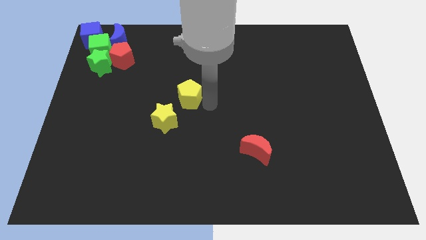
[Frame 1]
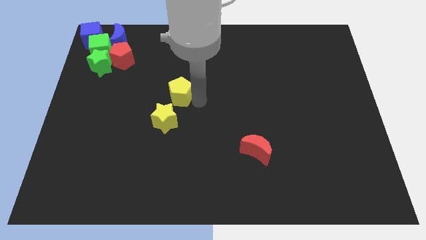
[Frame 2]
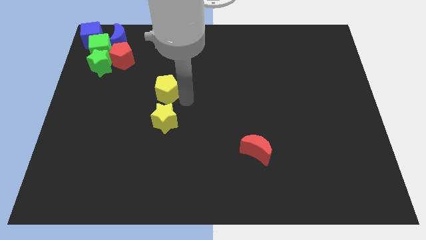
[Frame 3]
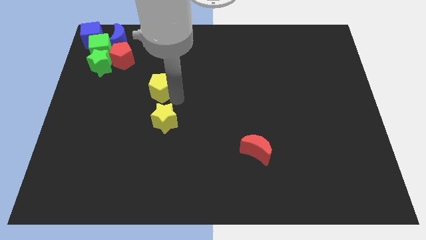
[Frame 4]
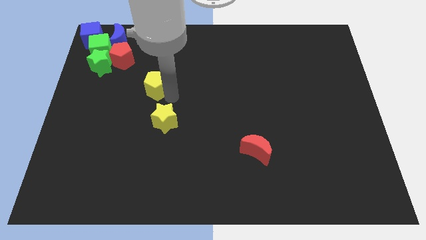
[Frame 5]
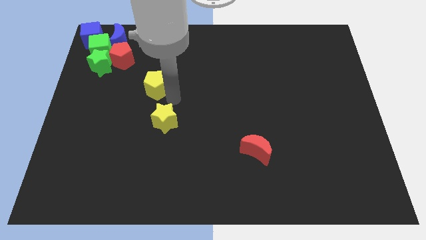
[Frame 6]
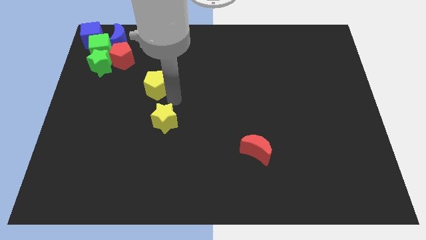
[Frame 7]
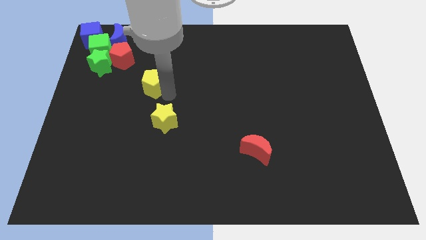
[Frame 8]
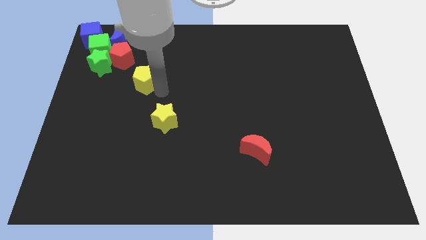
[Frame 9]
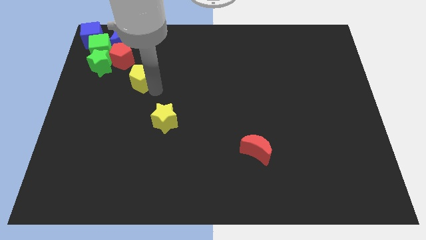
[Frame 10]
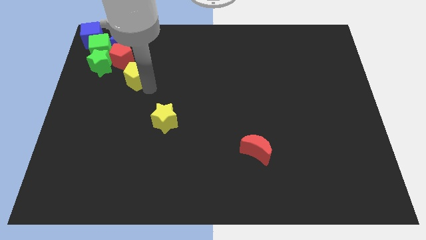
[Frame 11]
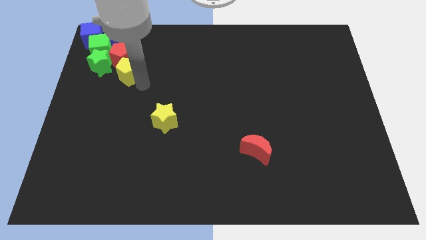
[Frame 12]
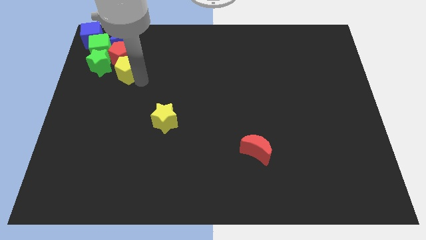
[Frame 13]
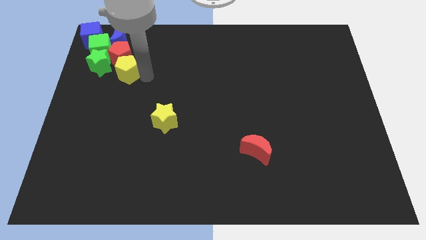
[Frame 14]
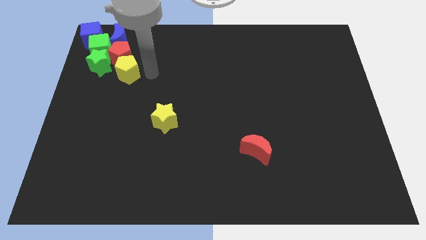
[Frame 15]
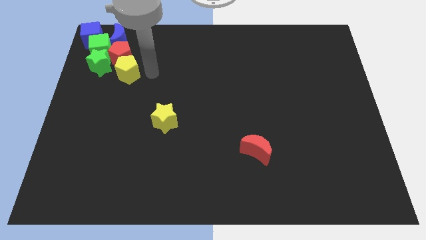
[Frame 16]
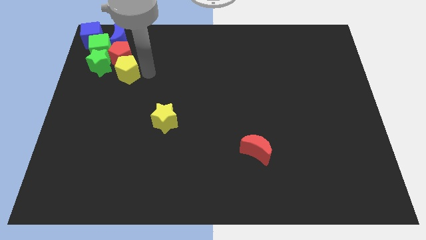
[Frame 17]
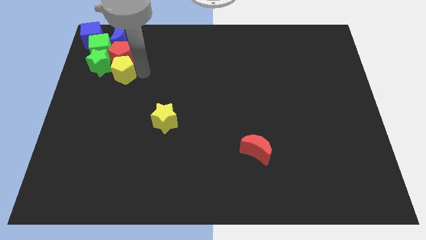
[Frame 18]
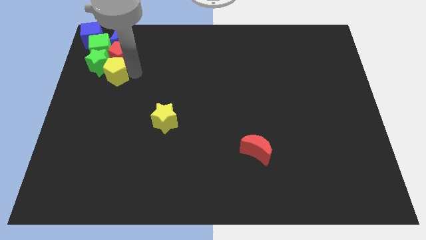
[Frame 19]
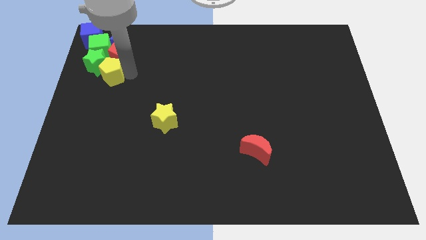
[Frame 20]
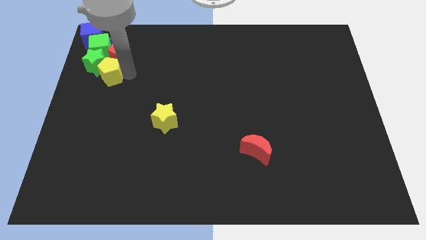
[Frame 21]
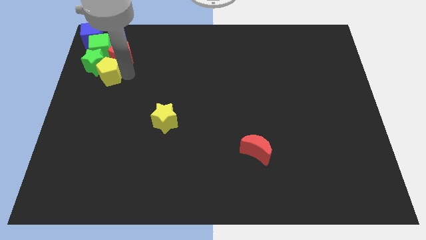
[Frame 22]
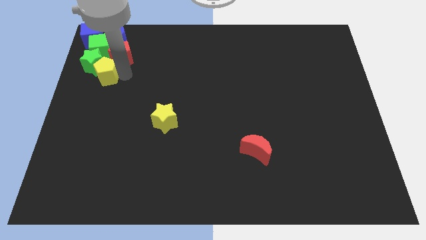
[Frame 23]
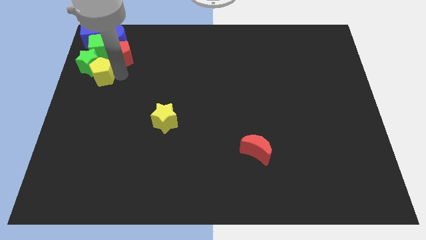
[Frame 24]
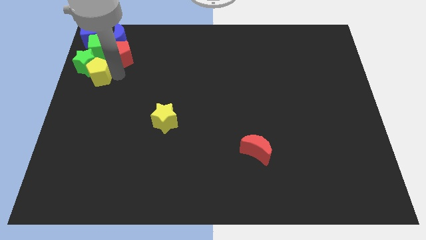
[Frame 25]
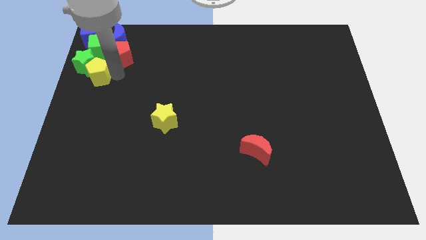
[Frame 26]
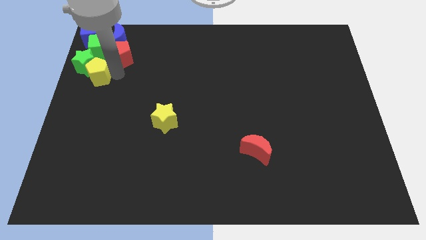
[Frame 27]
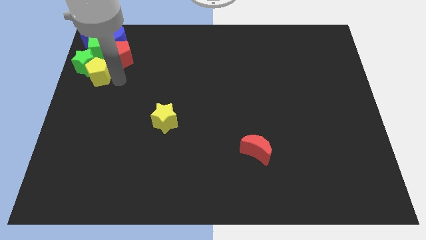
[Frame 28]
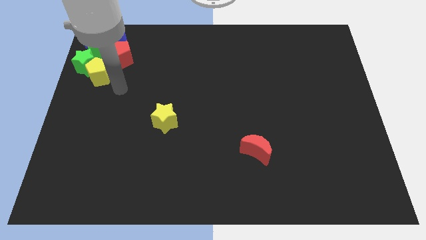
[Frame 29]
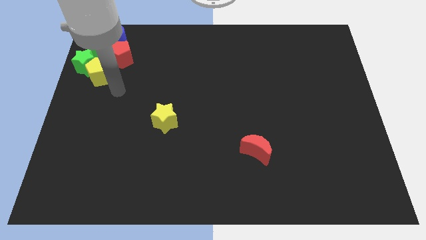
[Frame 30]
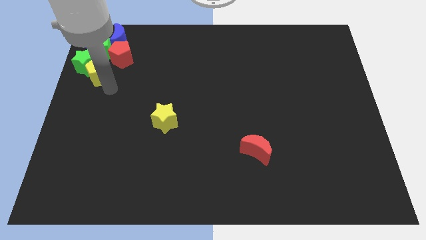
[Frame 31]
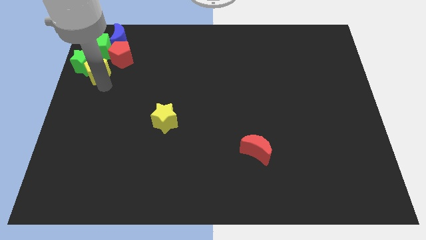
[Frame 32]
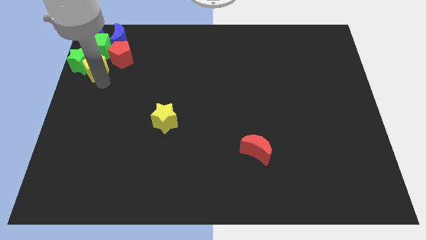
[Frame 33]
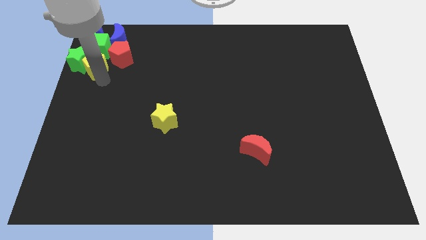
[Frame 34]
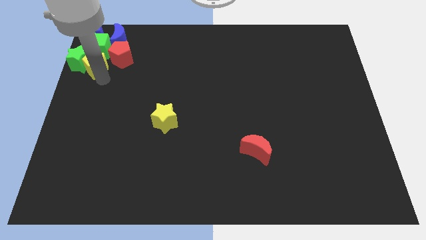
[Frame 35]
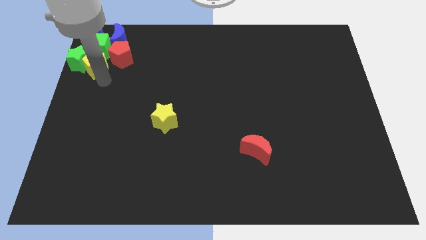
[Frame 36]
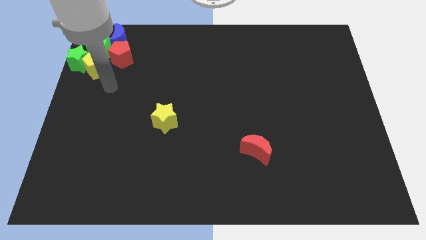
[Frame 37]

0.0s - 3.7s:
move the yellow pentagon into the green star

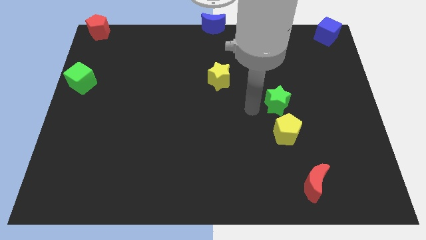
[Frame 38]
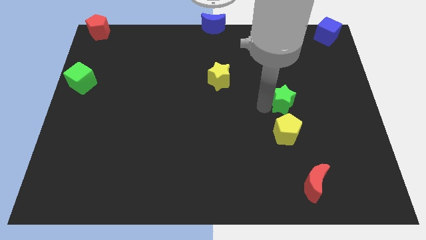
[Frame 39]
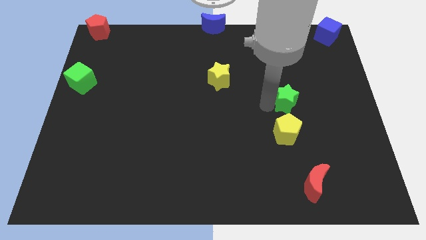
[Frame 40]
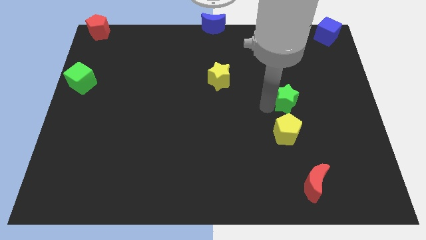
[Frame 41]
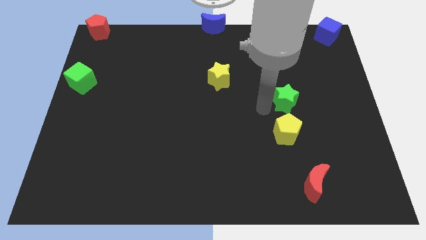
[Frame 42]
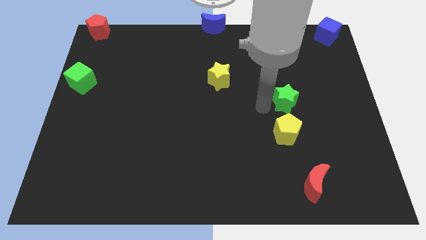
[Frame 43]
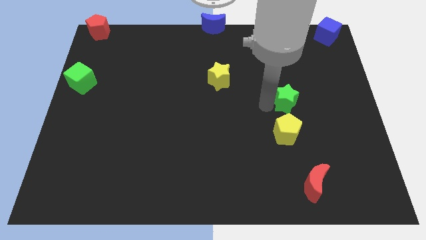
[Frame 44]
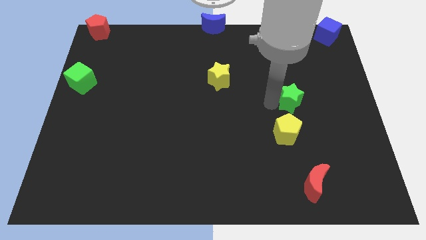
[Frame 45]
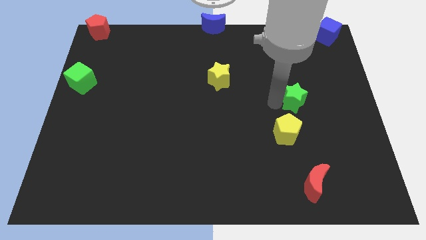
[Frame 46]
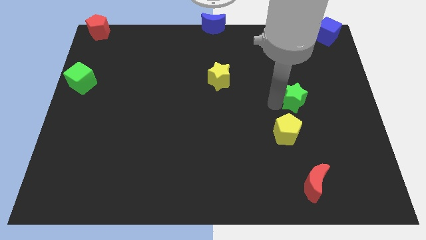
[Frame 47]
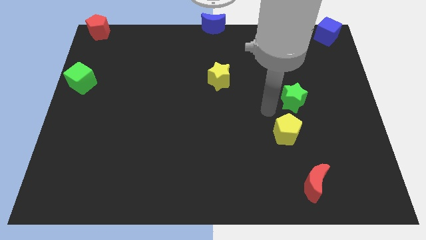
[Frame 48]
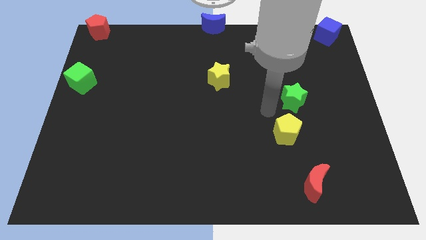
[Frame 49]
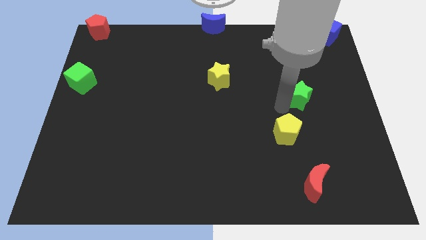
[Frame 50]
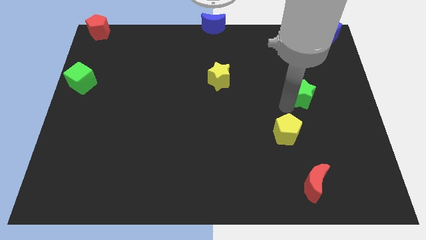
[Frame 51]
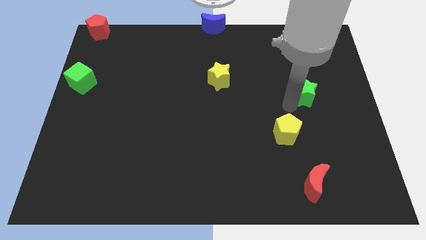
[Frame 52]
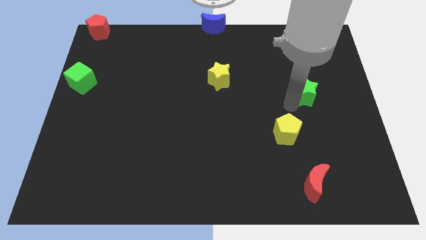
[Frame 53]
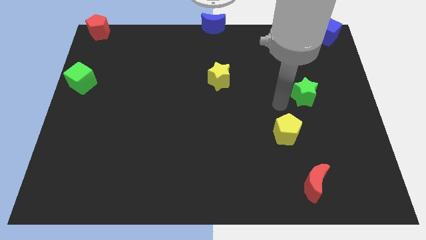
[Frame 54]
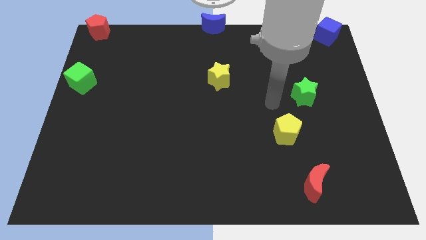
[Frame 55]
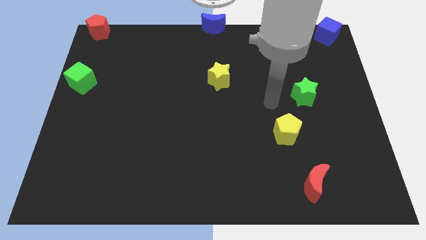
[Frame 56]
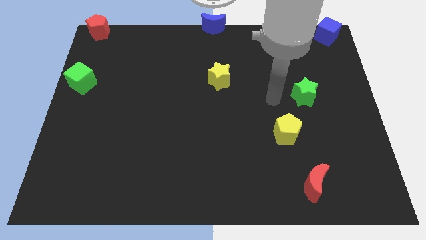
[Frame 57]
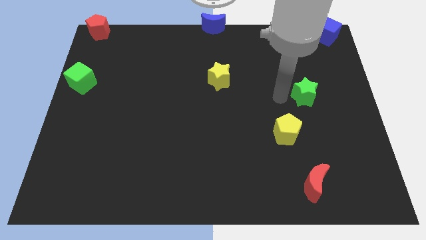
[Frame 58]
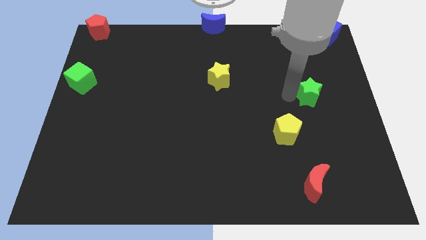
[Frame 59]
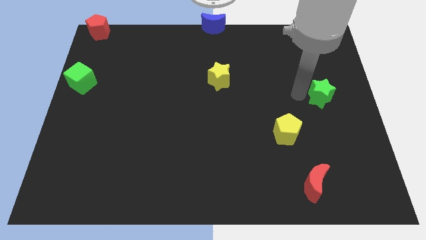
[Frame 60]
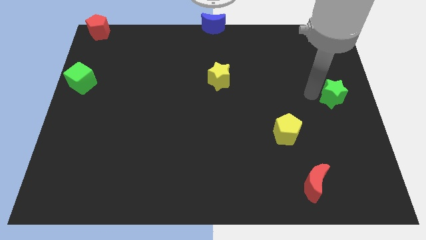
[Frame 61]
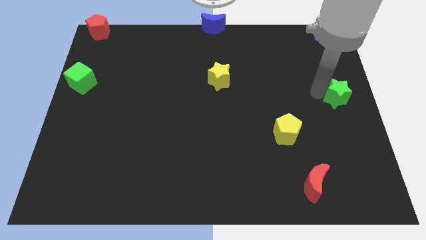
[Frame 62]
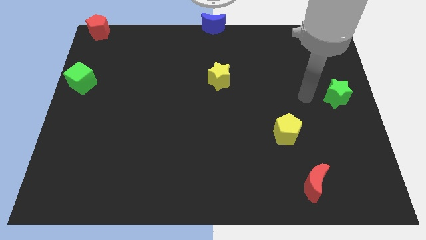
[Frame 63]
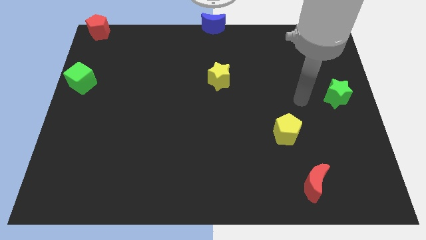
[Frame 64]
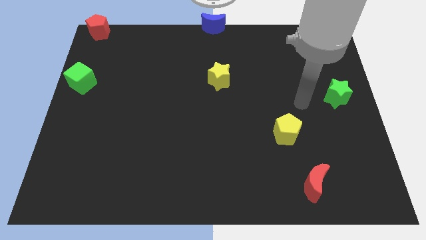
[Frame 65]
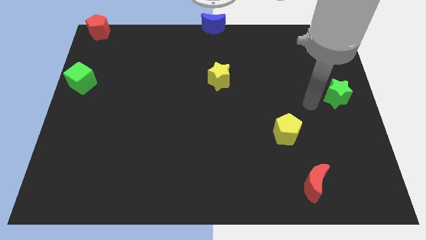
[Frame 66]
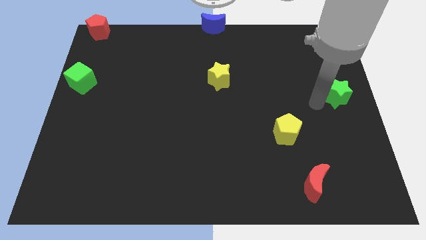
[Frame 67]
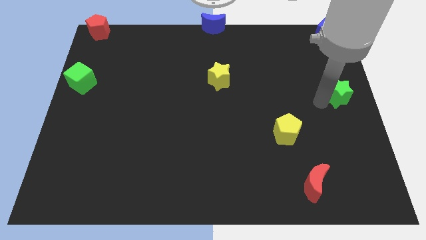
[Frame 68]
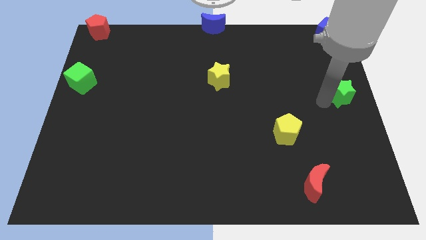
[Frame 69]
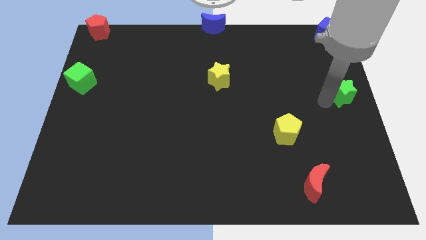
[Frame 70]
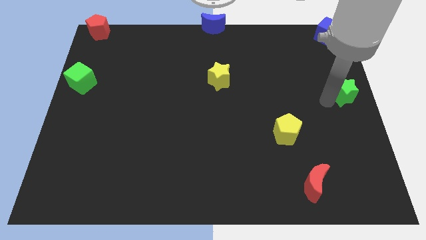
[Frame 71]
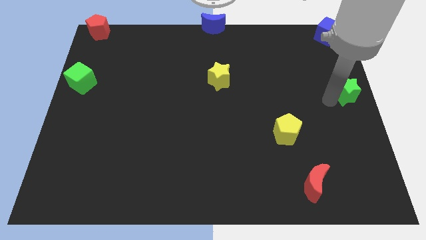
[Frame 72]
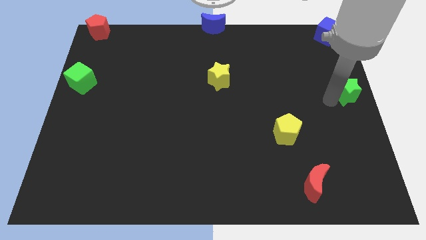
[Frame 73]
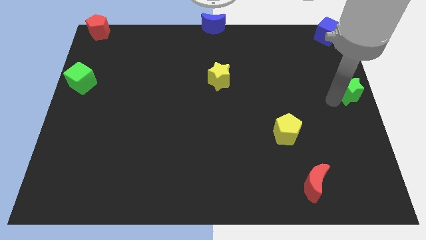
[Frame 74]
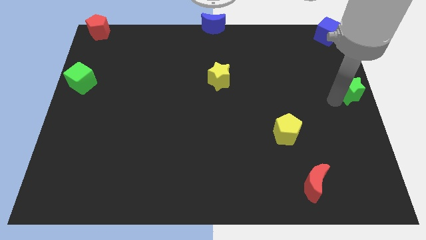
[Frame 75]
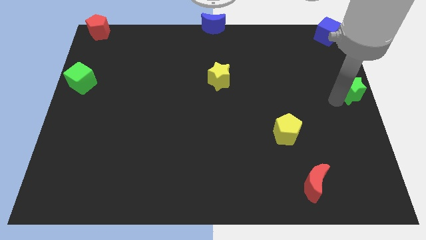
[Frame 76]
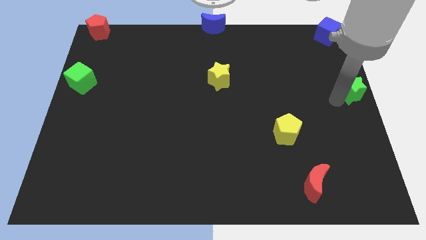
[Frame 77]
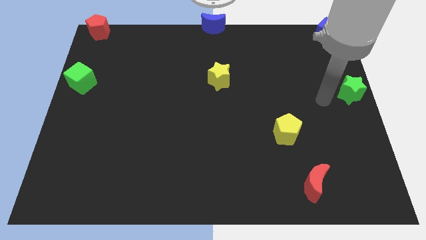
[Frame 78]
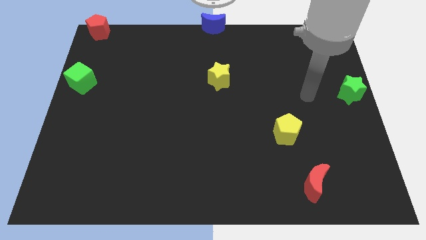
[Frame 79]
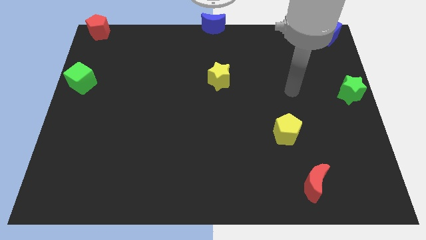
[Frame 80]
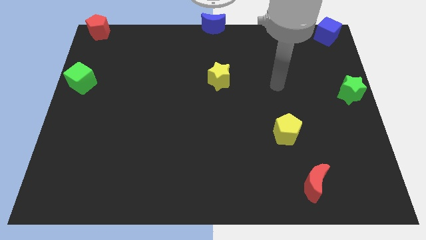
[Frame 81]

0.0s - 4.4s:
push the green star to the center right of the board

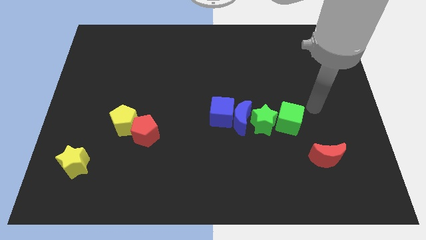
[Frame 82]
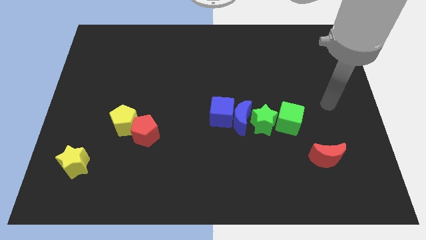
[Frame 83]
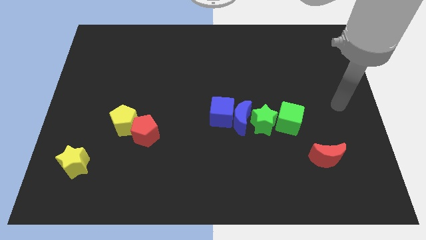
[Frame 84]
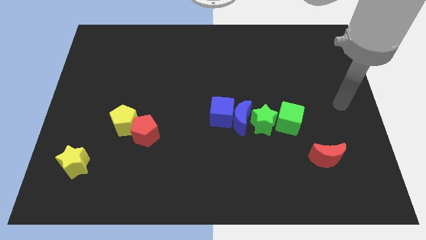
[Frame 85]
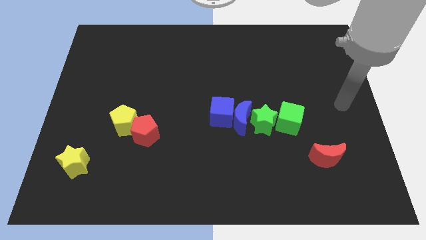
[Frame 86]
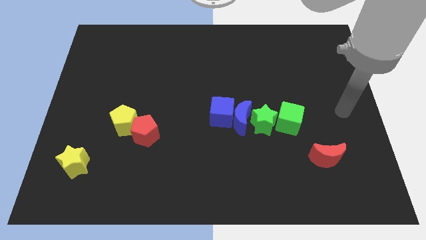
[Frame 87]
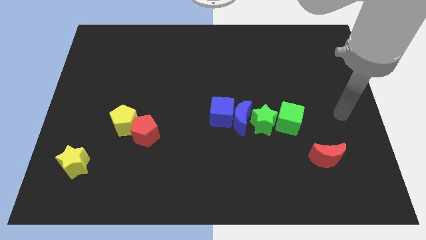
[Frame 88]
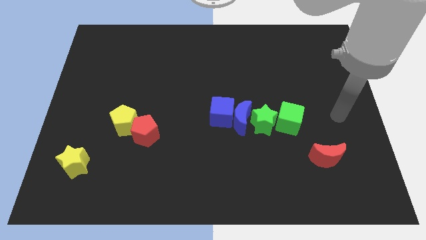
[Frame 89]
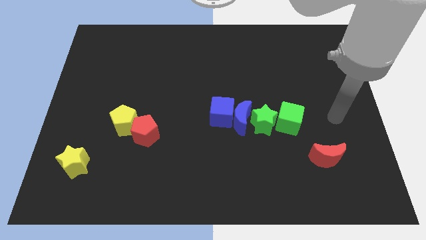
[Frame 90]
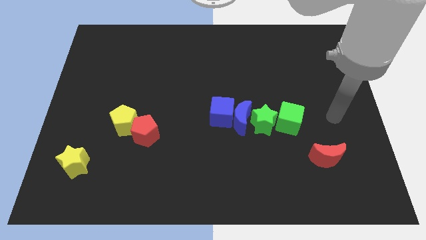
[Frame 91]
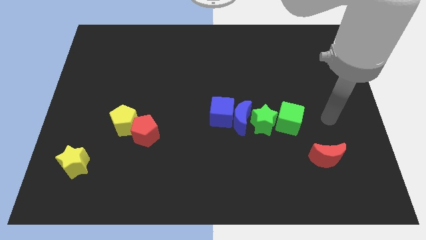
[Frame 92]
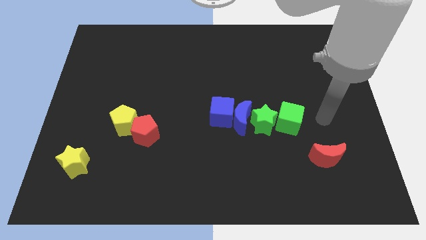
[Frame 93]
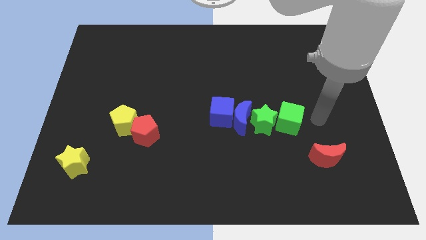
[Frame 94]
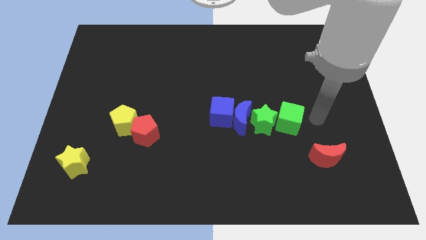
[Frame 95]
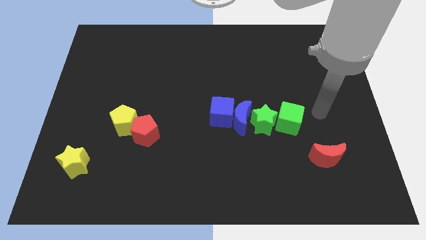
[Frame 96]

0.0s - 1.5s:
point your arm at the right of the green cube
